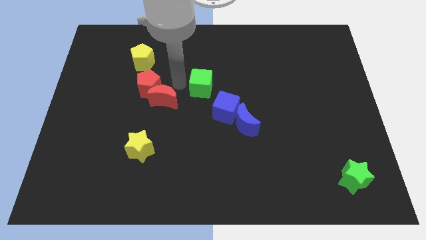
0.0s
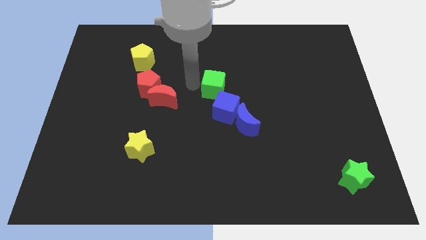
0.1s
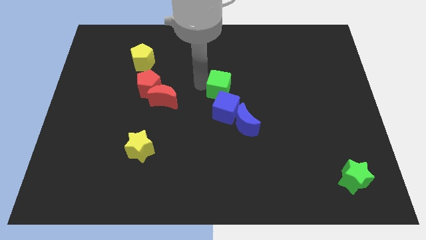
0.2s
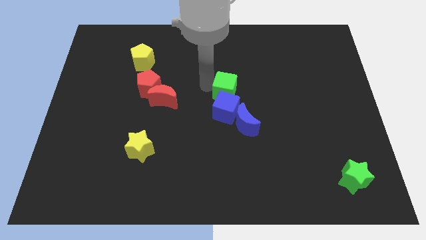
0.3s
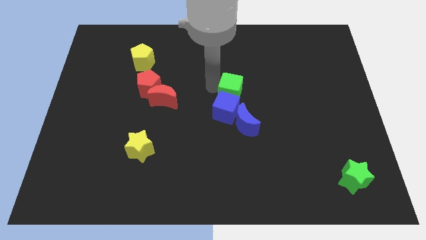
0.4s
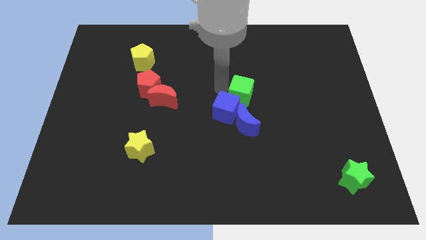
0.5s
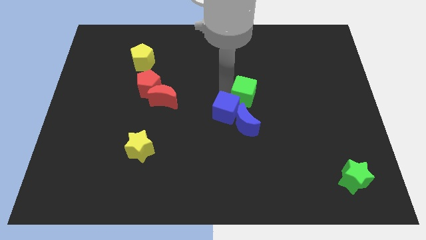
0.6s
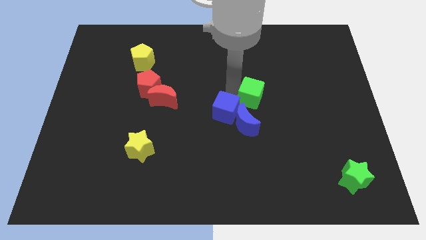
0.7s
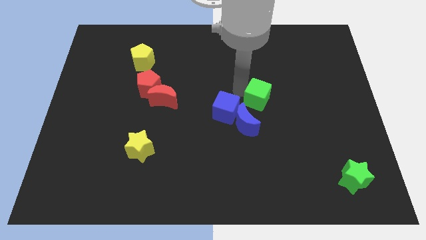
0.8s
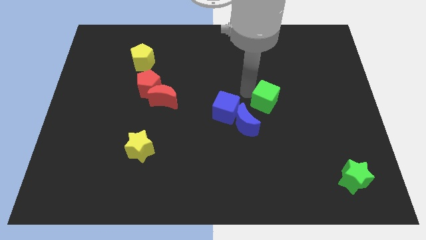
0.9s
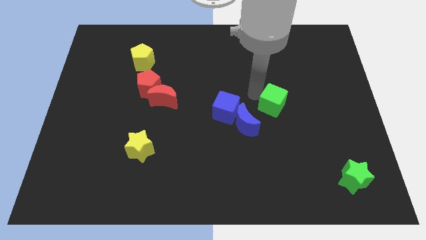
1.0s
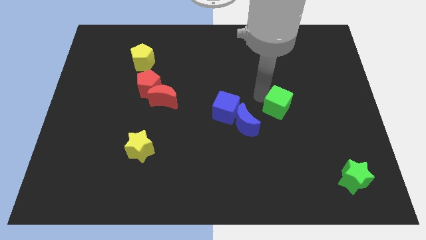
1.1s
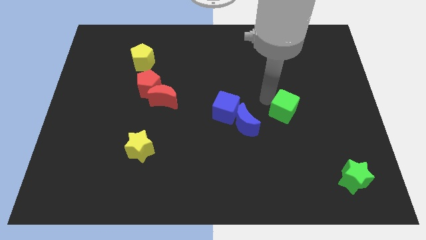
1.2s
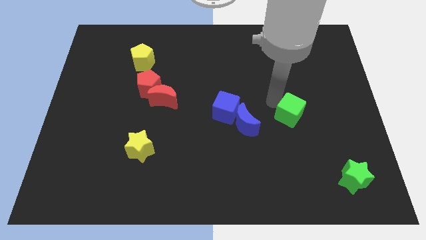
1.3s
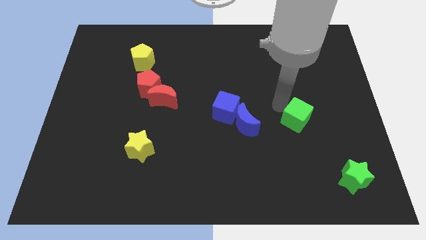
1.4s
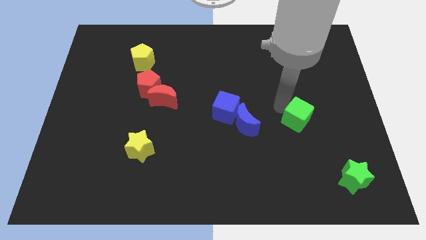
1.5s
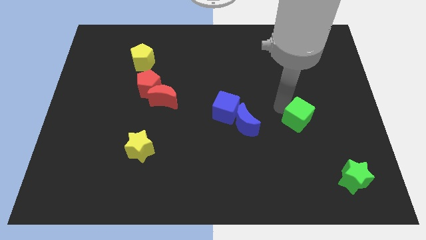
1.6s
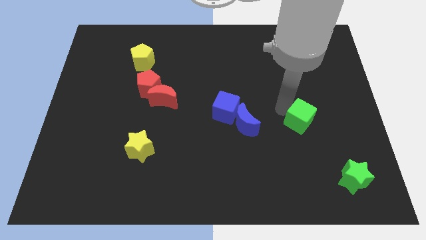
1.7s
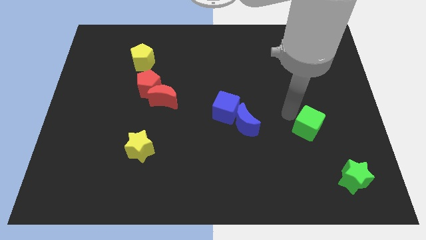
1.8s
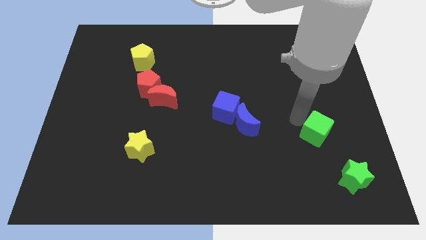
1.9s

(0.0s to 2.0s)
place the green cube to the right of the blue moon

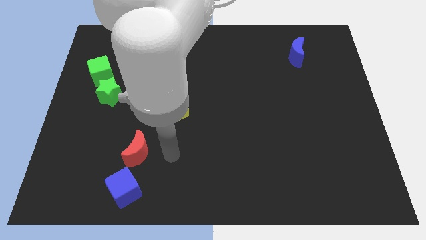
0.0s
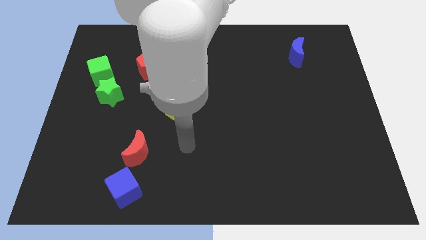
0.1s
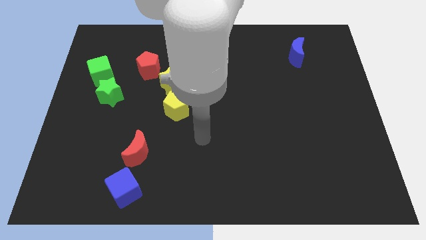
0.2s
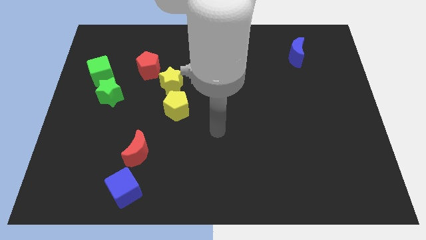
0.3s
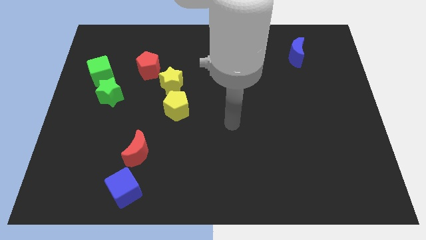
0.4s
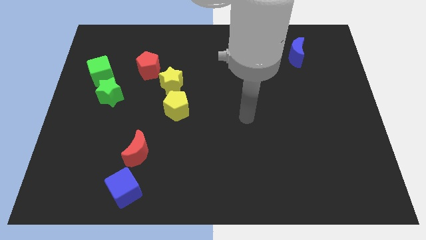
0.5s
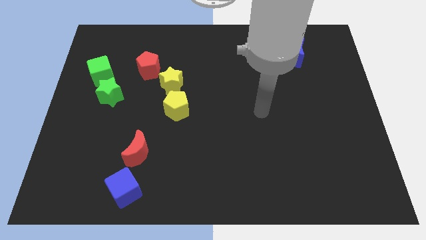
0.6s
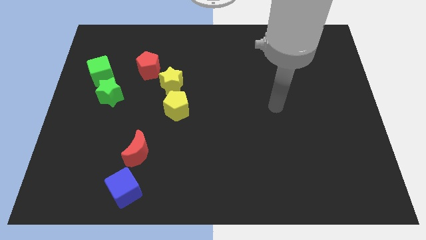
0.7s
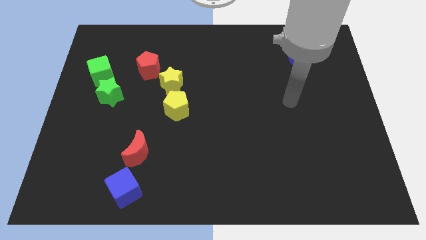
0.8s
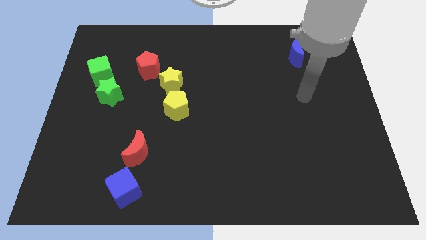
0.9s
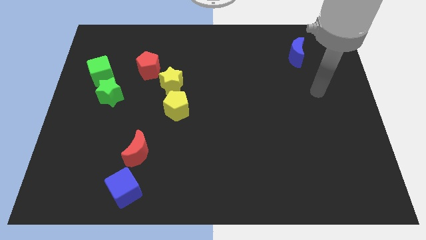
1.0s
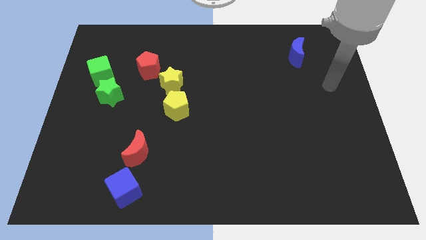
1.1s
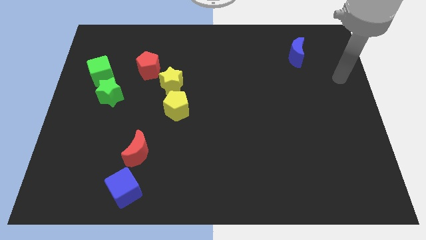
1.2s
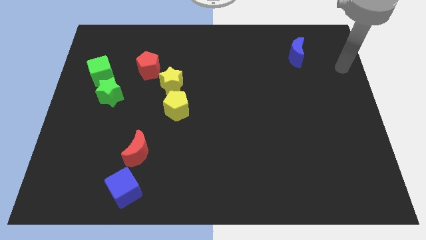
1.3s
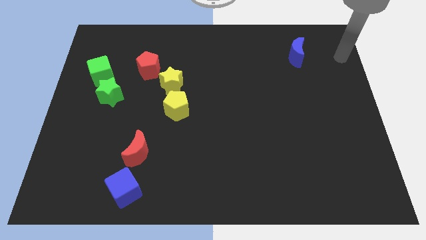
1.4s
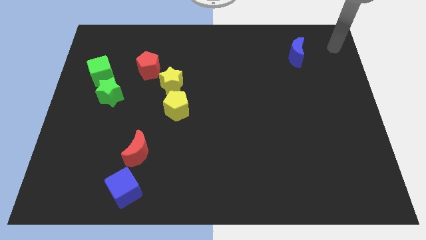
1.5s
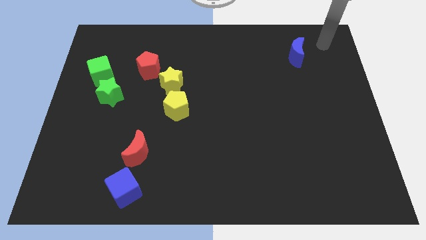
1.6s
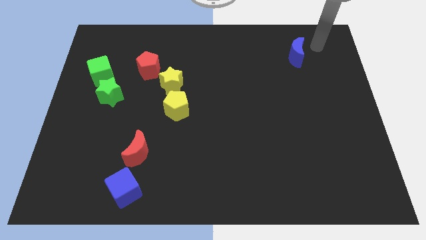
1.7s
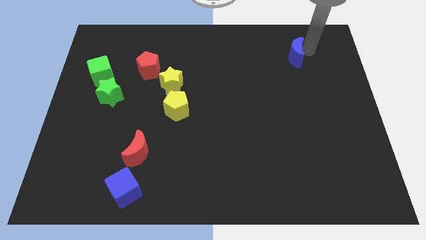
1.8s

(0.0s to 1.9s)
move your arm towards the blue crescent

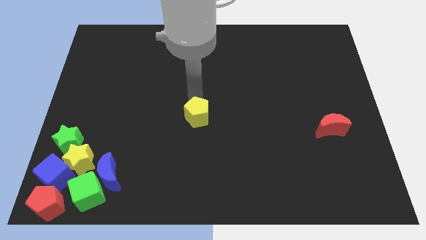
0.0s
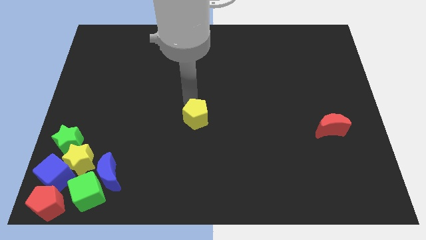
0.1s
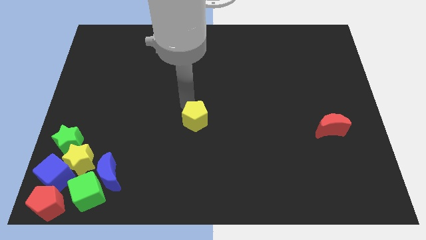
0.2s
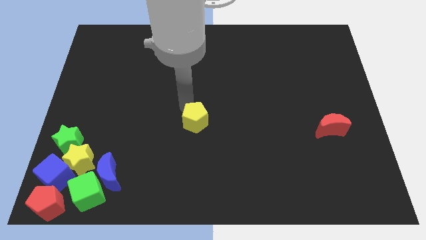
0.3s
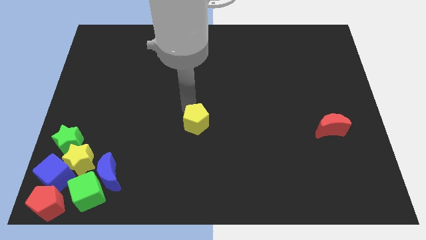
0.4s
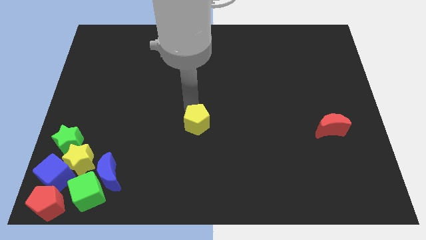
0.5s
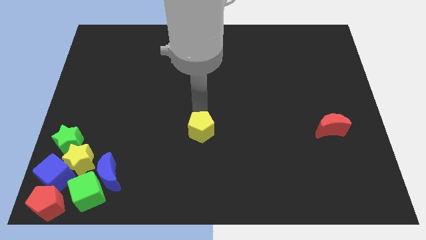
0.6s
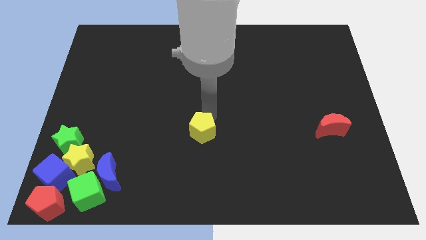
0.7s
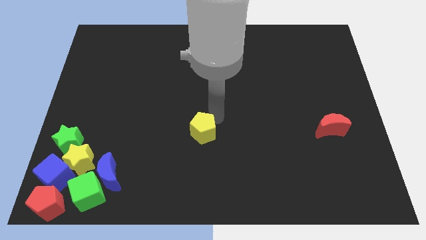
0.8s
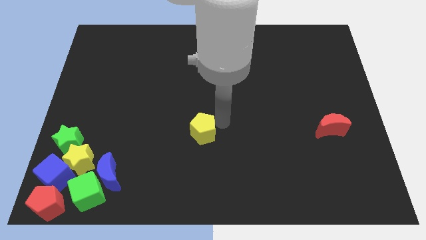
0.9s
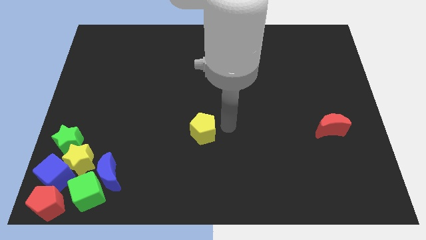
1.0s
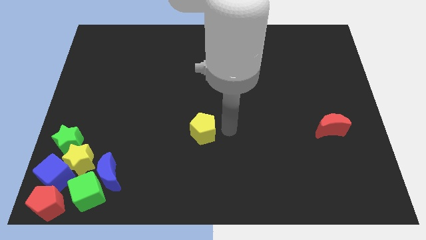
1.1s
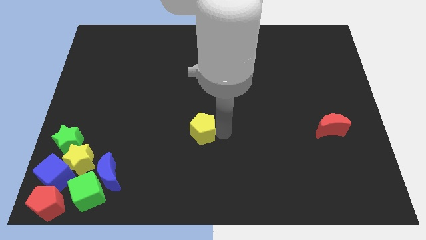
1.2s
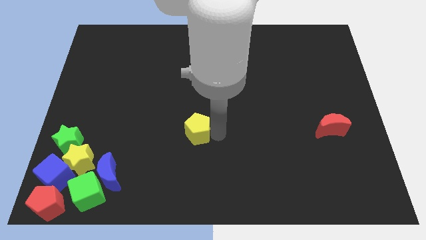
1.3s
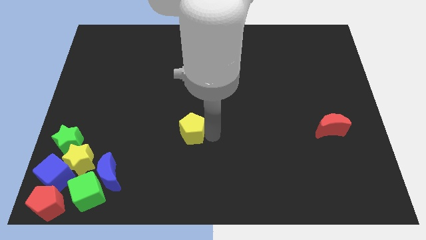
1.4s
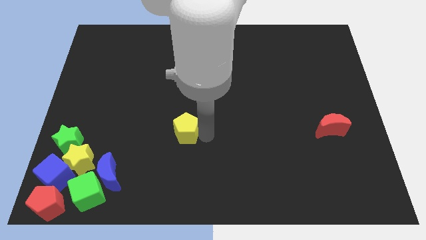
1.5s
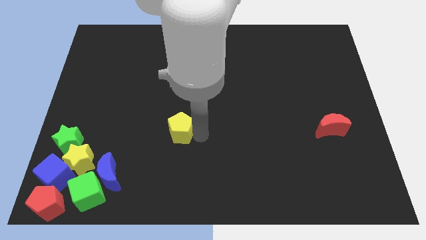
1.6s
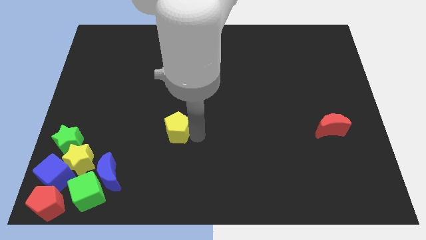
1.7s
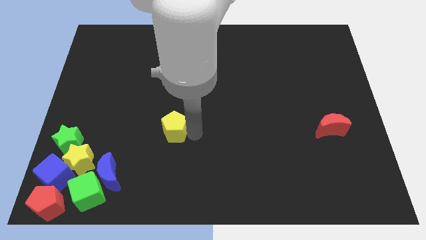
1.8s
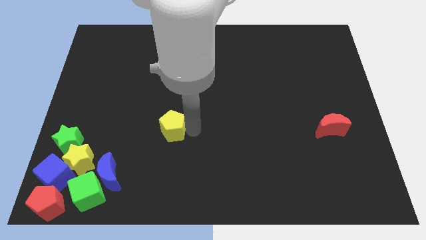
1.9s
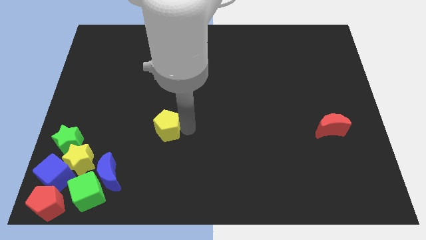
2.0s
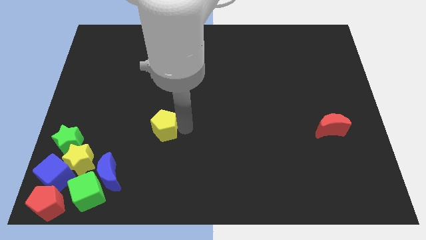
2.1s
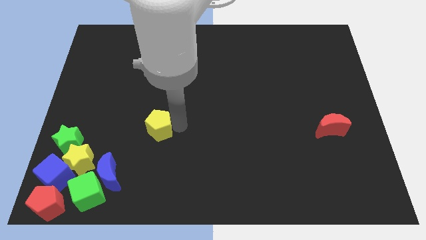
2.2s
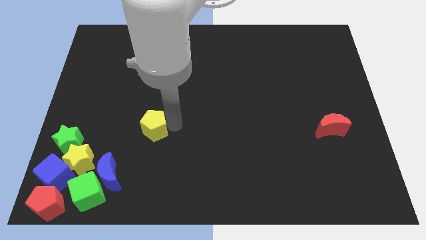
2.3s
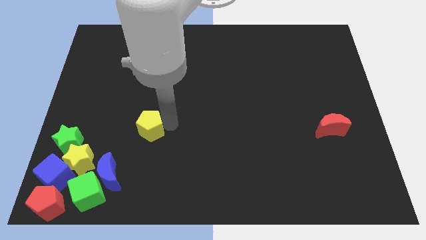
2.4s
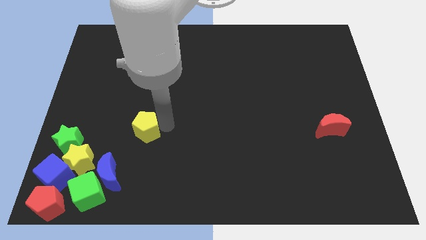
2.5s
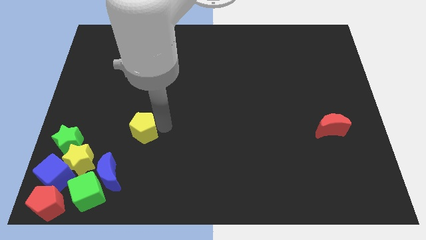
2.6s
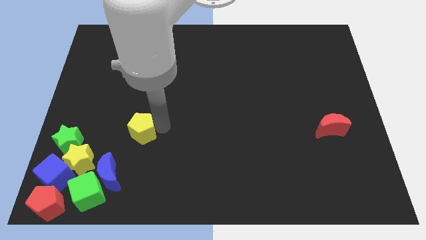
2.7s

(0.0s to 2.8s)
move the yellow pentagon towards the group of blocks

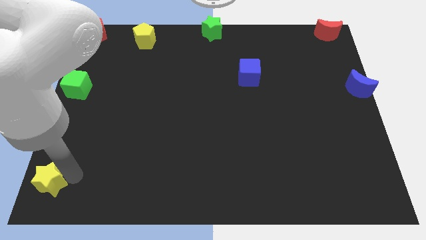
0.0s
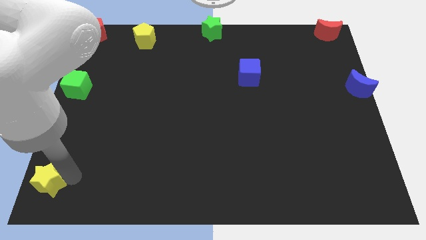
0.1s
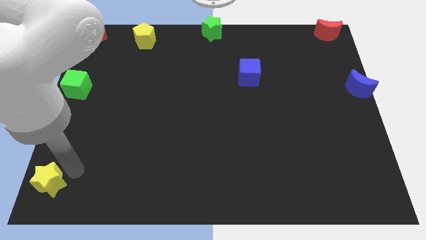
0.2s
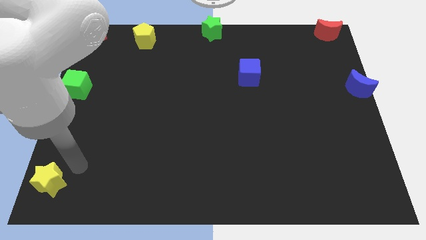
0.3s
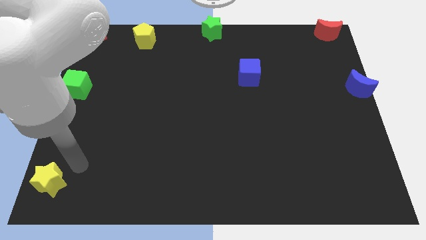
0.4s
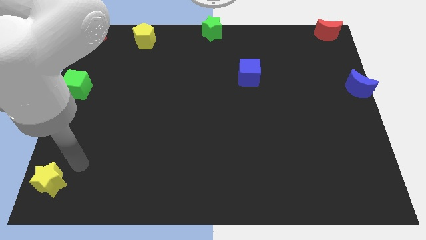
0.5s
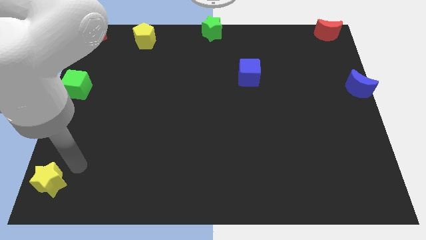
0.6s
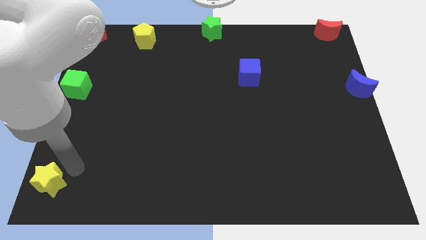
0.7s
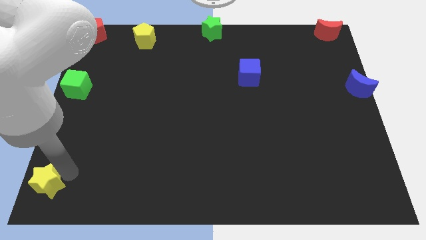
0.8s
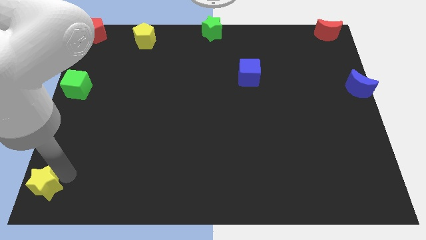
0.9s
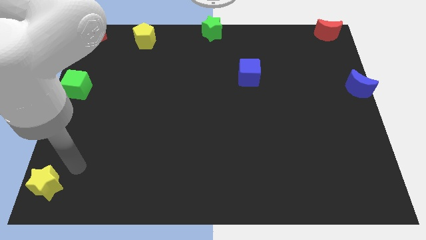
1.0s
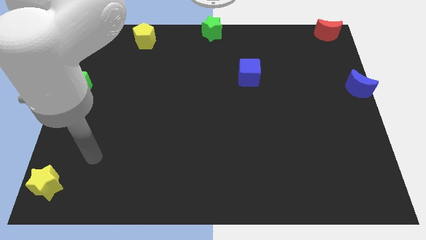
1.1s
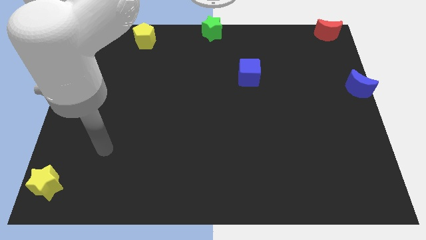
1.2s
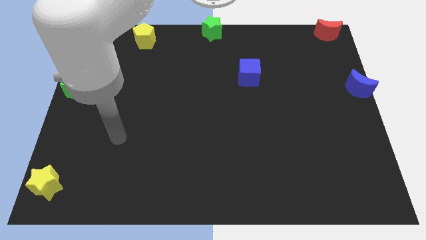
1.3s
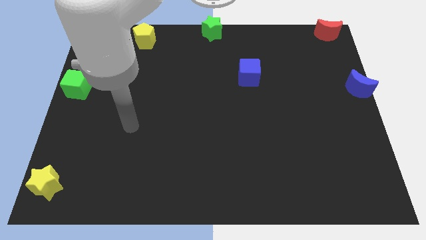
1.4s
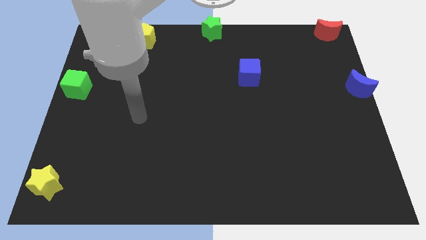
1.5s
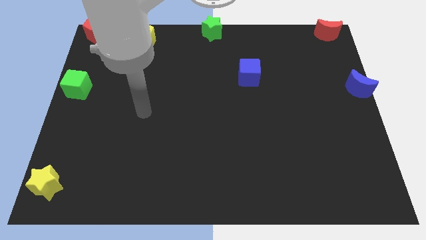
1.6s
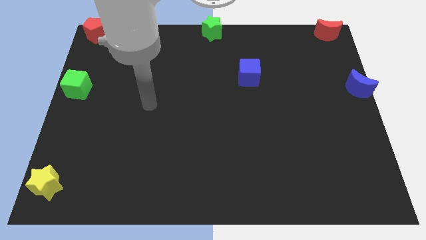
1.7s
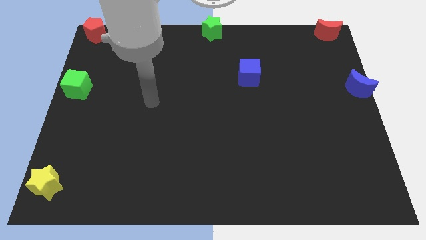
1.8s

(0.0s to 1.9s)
move yellow star to the bottom left corner of the board

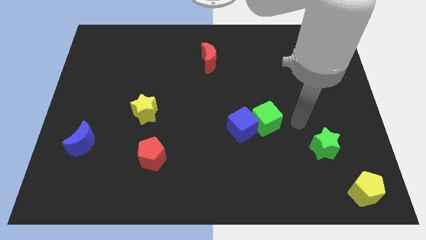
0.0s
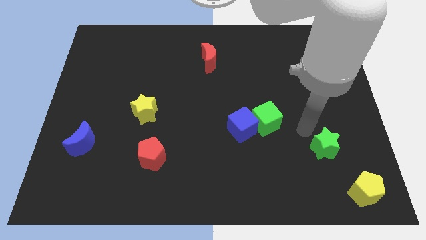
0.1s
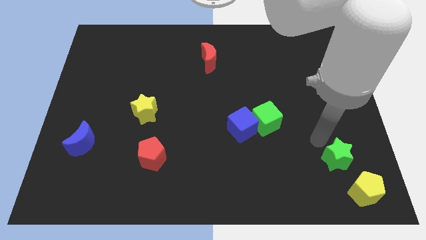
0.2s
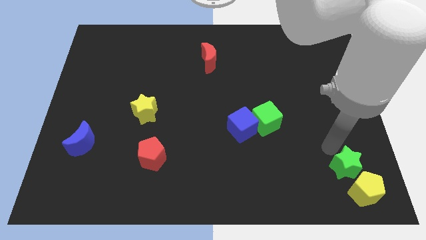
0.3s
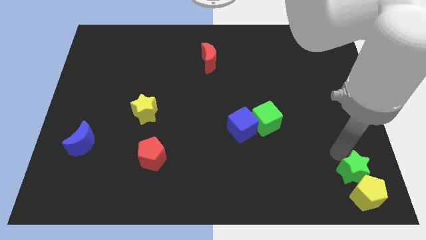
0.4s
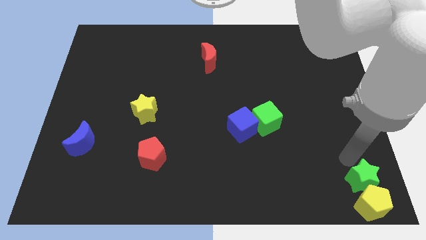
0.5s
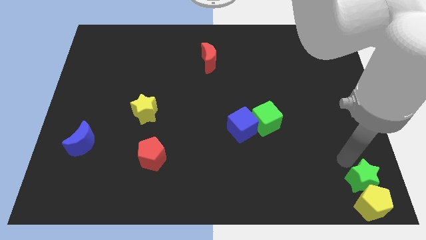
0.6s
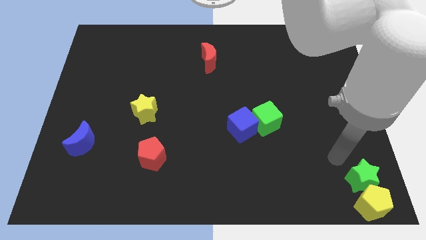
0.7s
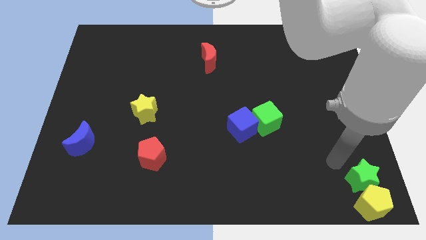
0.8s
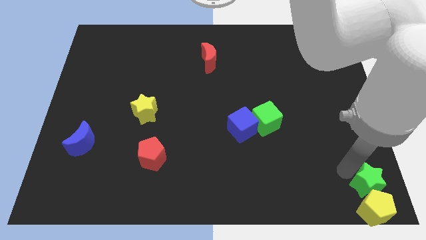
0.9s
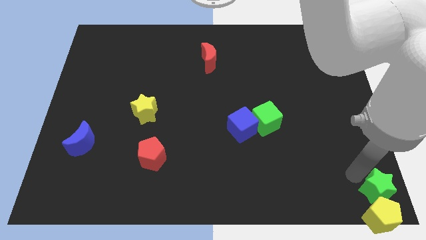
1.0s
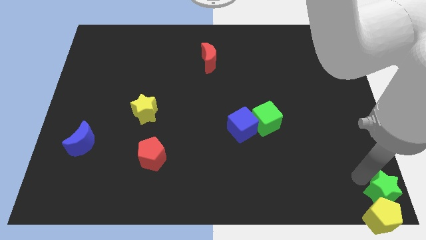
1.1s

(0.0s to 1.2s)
push the green star above the yellow pentagon
